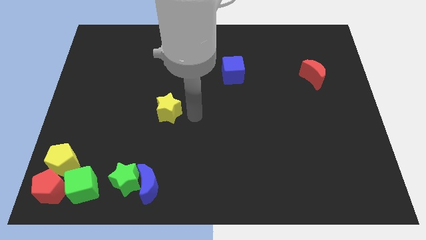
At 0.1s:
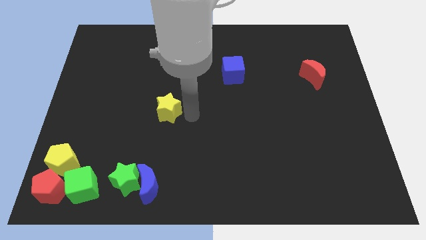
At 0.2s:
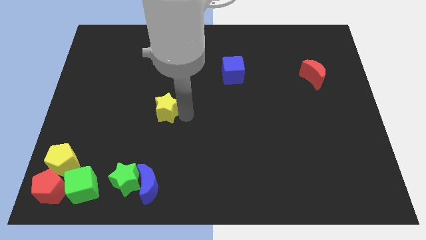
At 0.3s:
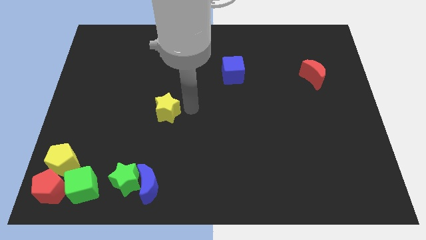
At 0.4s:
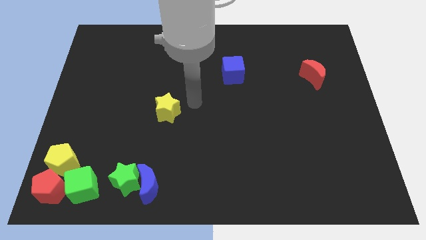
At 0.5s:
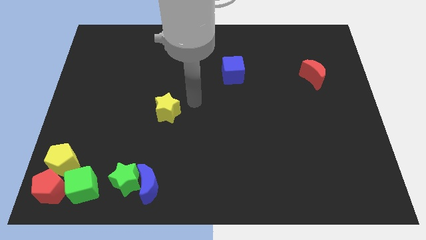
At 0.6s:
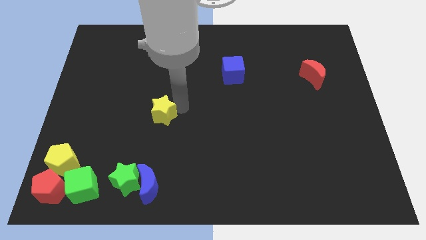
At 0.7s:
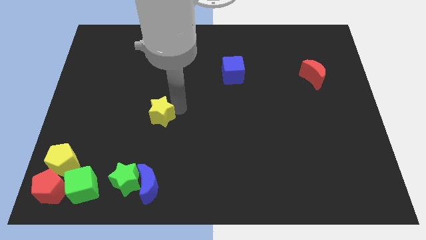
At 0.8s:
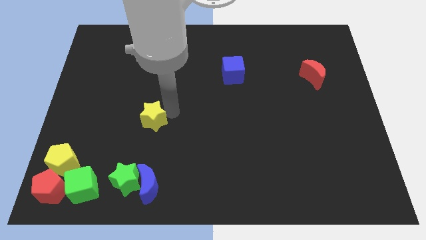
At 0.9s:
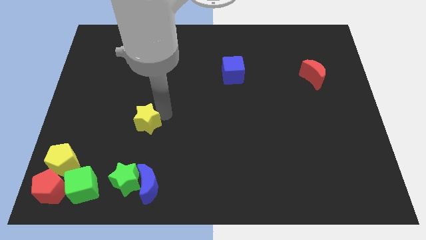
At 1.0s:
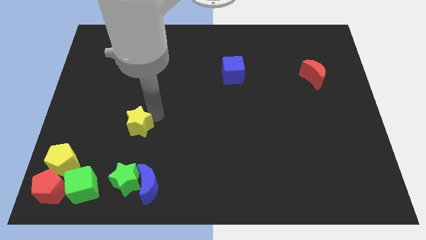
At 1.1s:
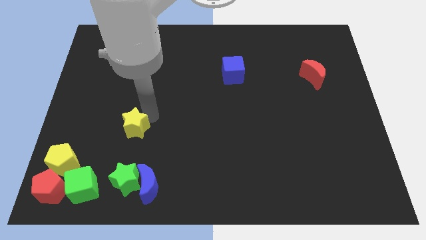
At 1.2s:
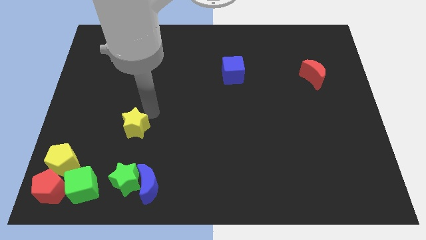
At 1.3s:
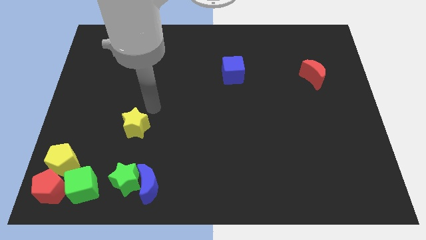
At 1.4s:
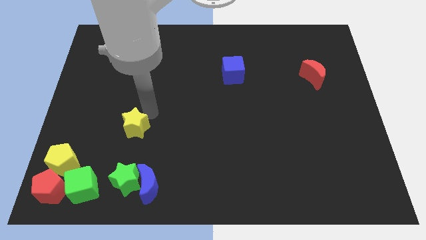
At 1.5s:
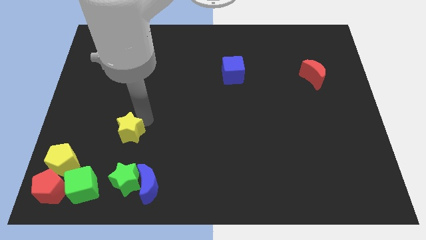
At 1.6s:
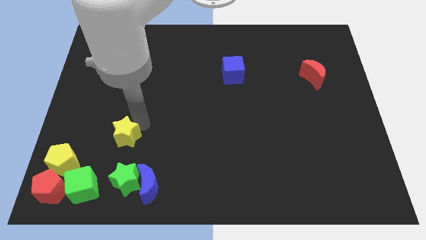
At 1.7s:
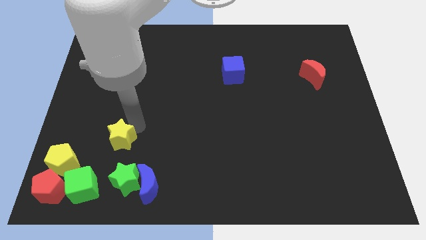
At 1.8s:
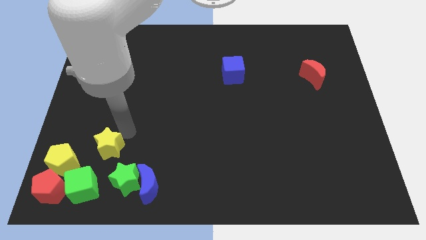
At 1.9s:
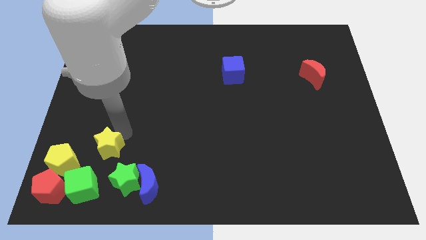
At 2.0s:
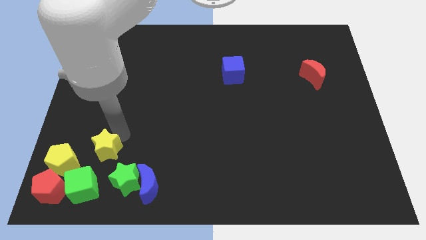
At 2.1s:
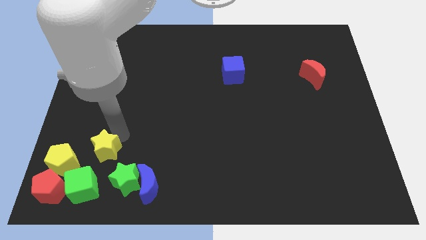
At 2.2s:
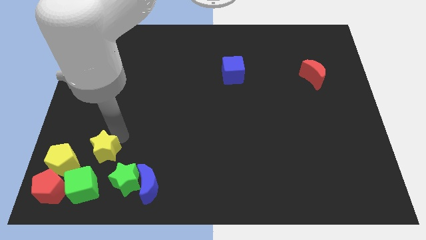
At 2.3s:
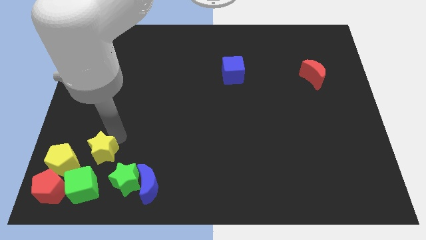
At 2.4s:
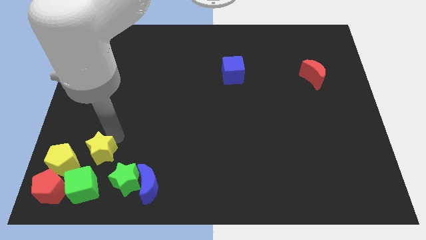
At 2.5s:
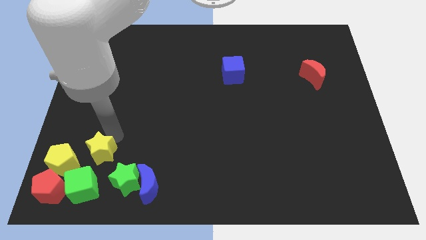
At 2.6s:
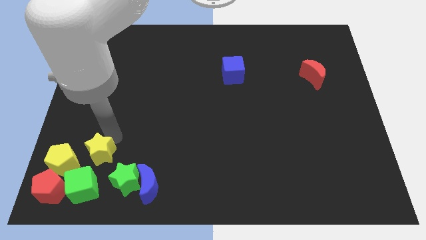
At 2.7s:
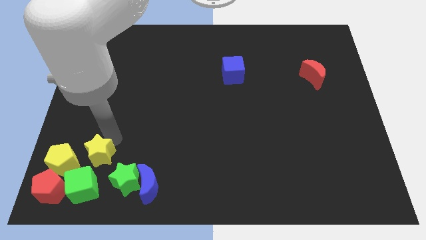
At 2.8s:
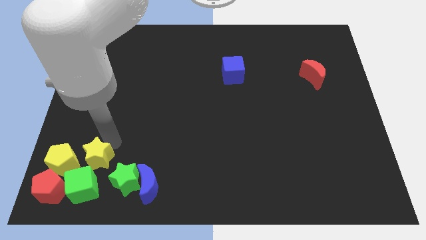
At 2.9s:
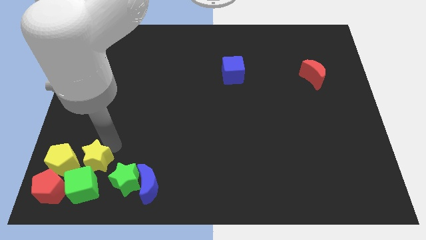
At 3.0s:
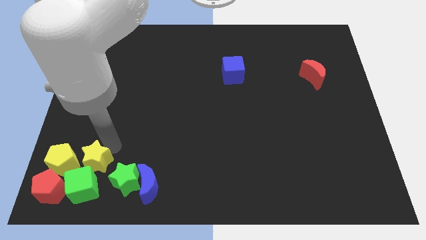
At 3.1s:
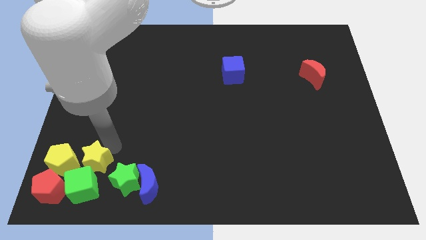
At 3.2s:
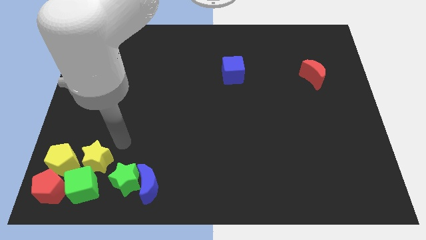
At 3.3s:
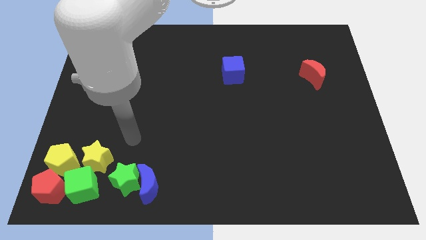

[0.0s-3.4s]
push yellow star into the group of blocks

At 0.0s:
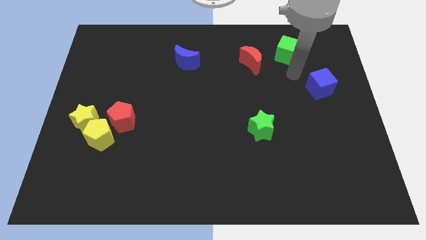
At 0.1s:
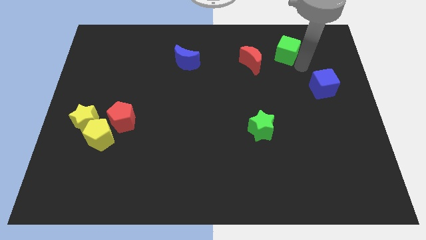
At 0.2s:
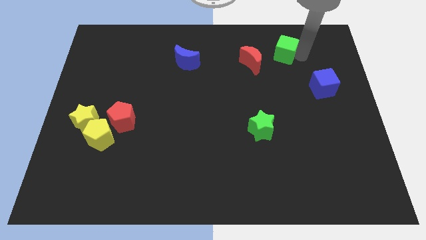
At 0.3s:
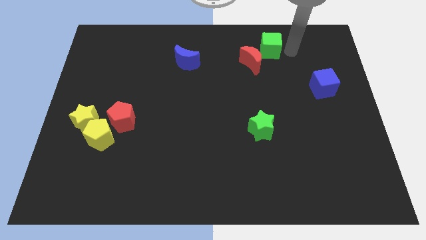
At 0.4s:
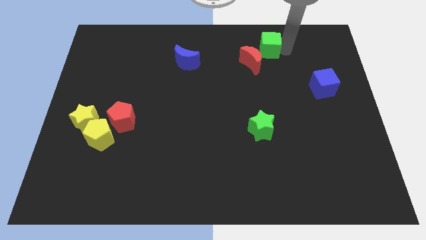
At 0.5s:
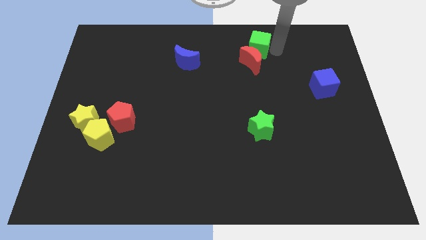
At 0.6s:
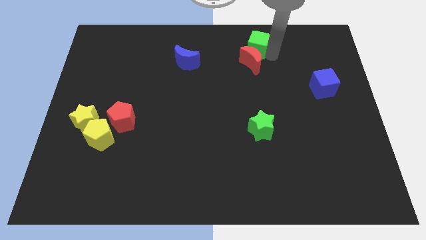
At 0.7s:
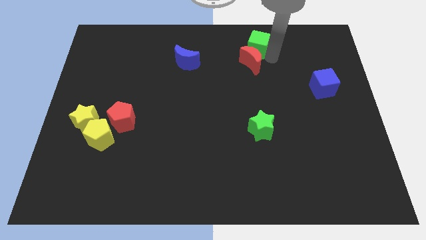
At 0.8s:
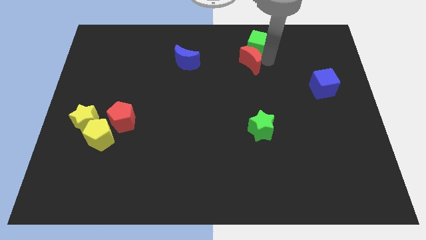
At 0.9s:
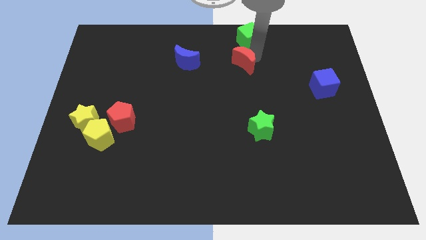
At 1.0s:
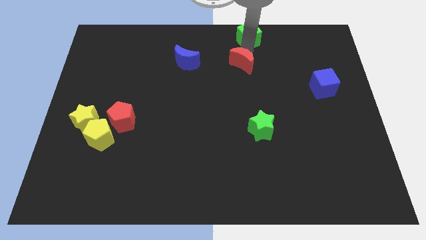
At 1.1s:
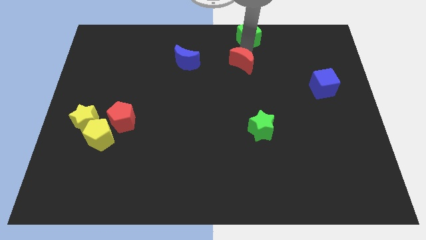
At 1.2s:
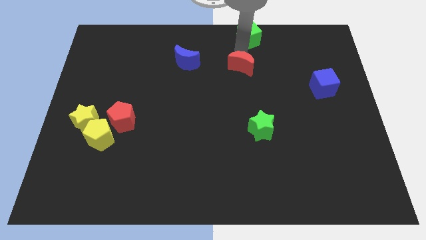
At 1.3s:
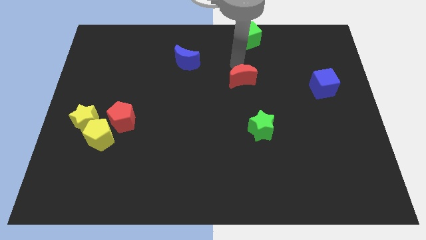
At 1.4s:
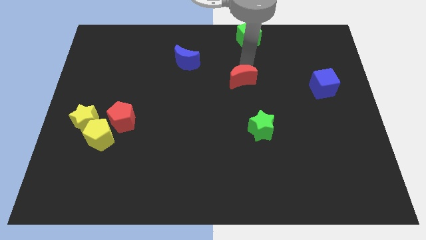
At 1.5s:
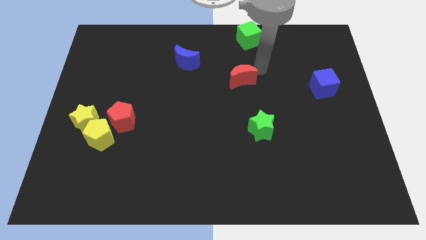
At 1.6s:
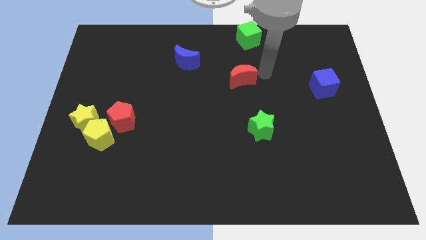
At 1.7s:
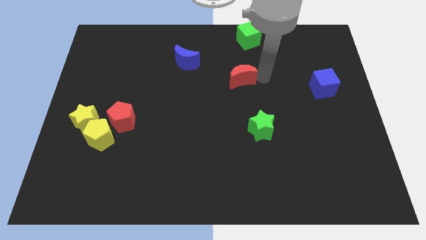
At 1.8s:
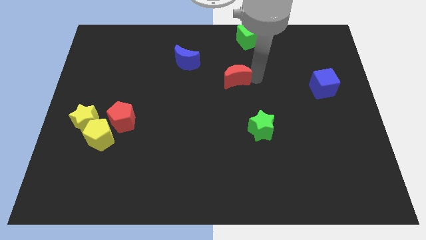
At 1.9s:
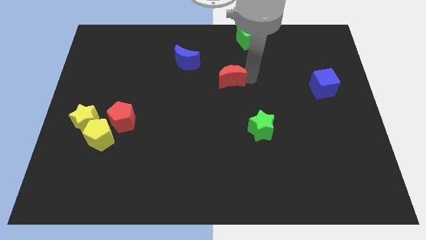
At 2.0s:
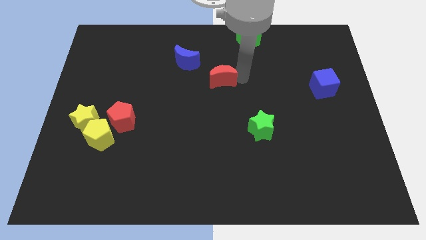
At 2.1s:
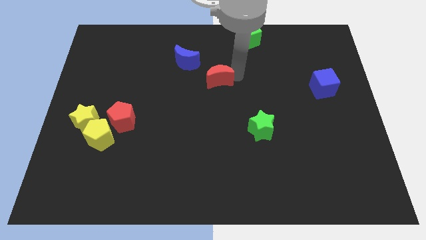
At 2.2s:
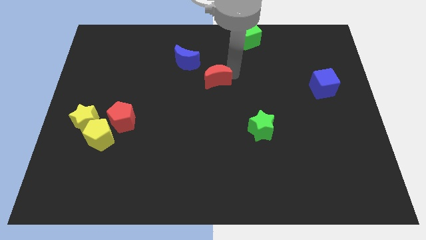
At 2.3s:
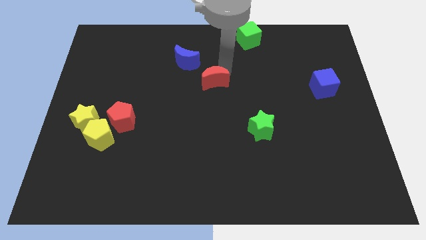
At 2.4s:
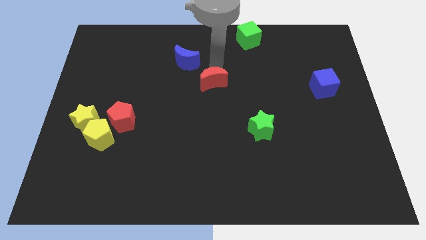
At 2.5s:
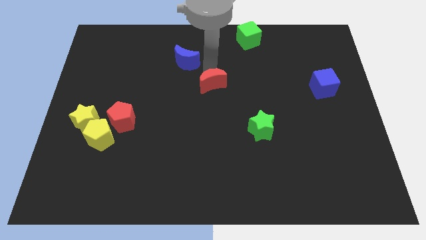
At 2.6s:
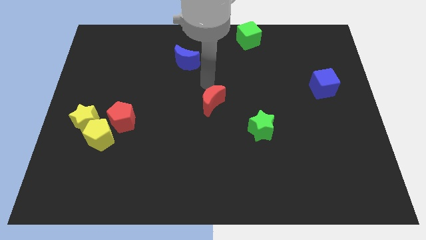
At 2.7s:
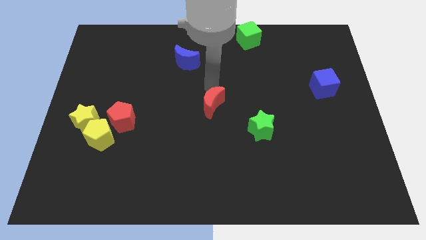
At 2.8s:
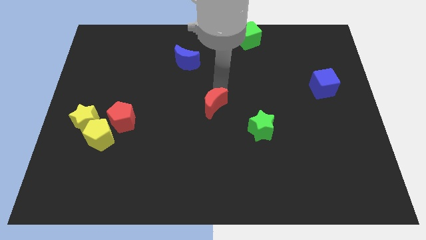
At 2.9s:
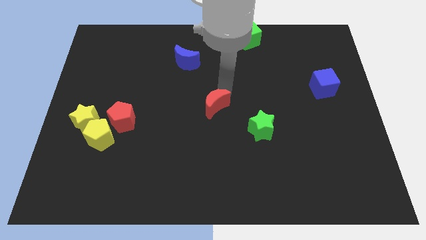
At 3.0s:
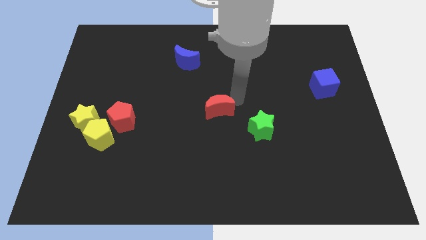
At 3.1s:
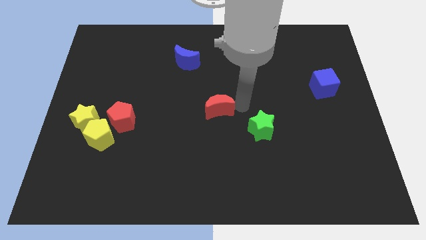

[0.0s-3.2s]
make a triangle with the blue cube red crescent and green cube

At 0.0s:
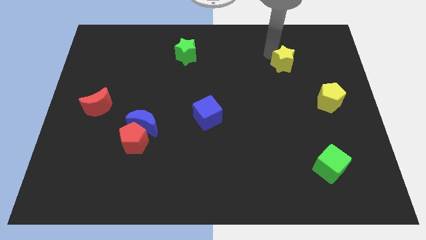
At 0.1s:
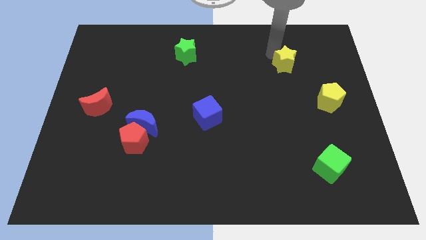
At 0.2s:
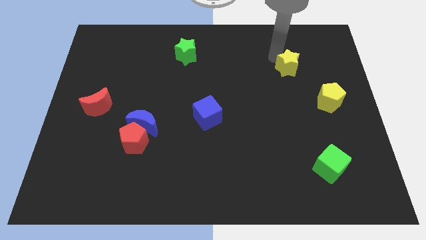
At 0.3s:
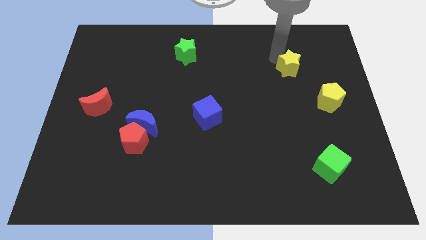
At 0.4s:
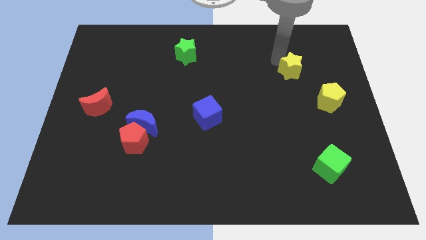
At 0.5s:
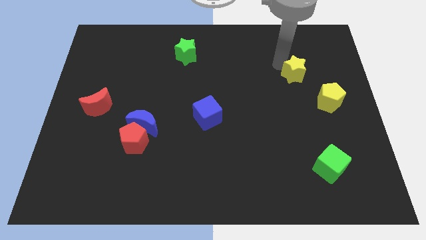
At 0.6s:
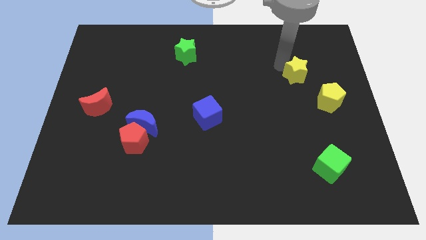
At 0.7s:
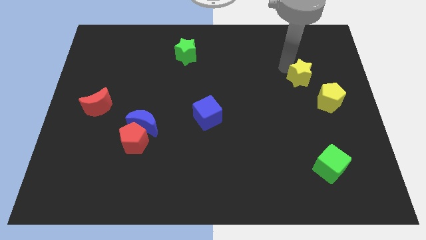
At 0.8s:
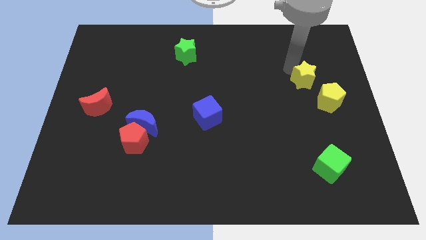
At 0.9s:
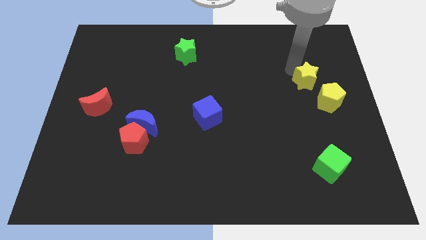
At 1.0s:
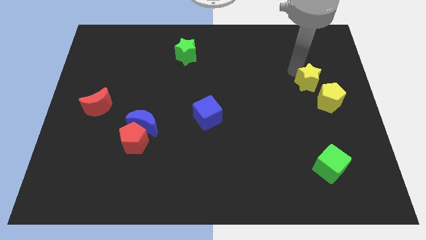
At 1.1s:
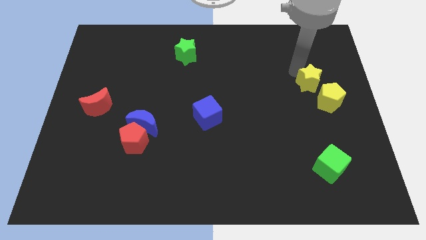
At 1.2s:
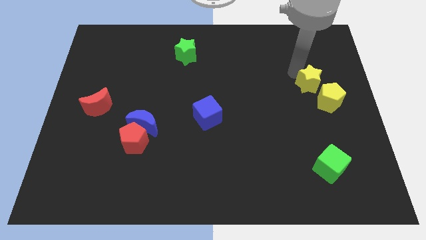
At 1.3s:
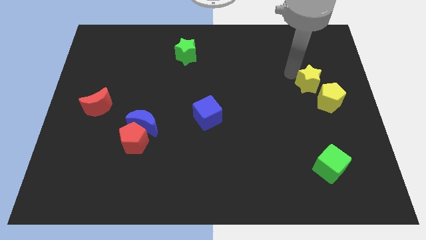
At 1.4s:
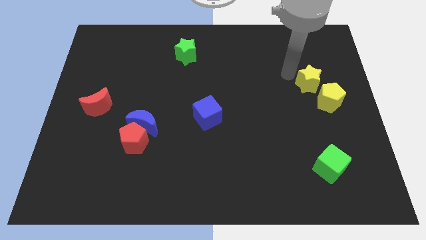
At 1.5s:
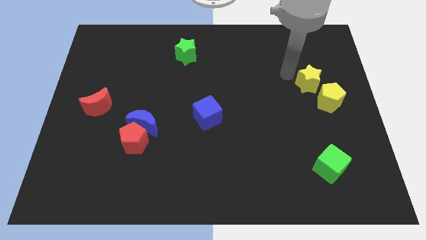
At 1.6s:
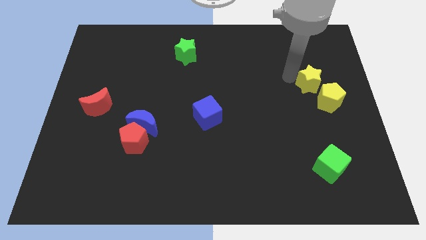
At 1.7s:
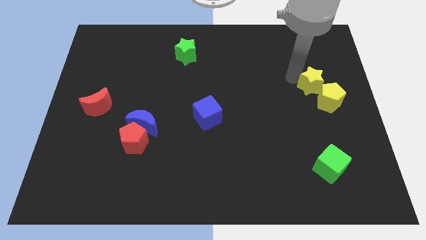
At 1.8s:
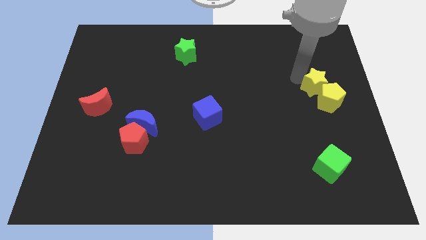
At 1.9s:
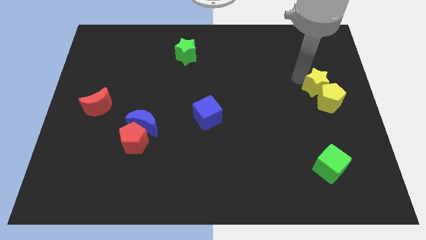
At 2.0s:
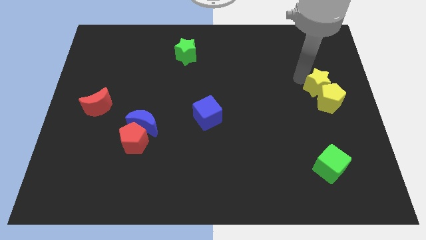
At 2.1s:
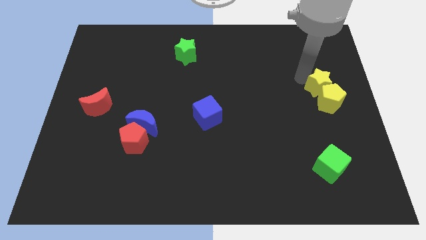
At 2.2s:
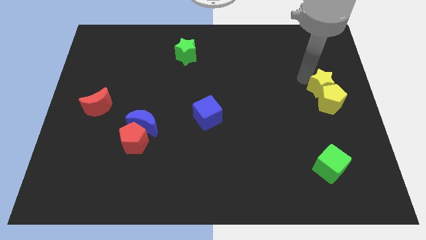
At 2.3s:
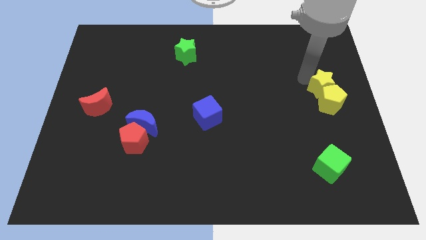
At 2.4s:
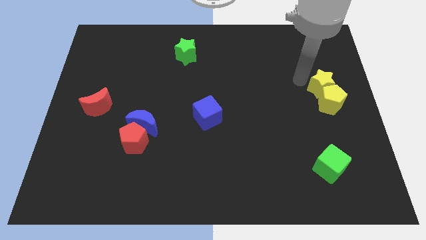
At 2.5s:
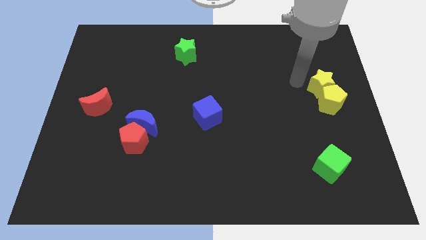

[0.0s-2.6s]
push the yellow star into yellow pentagon
